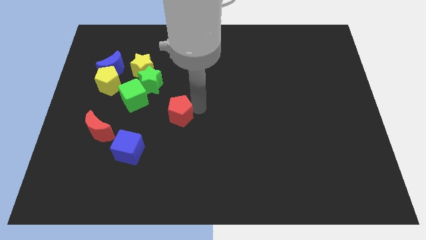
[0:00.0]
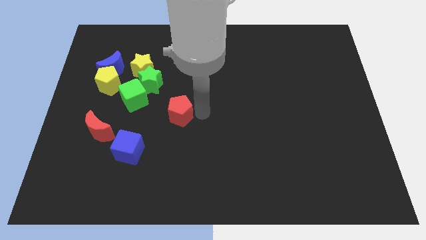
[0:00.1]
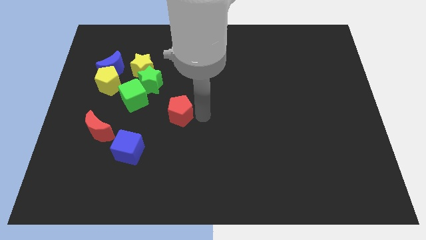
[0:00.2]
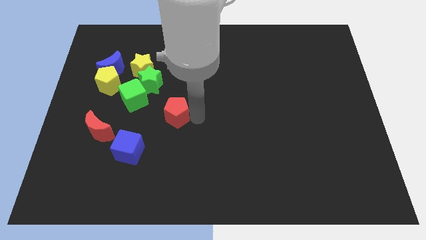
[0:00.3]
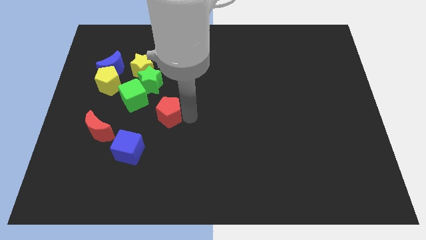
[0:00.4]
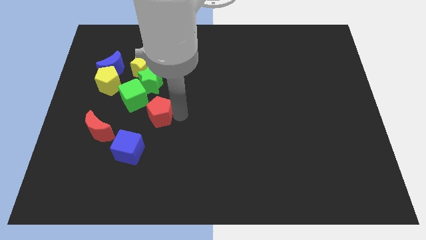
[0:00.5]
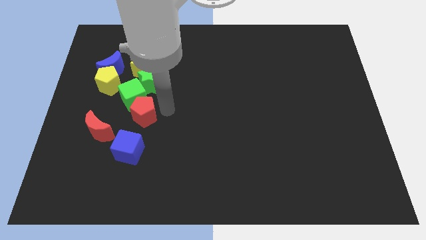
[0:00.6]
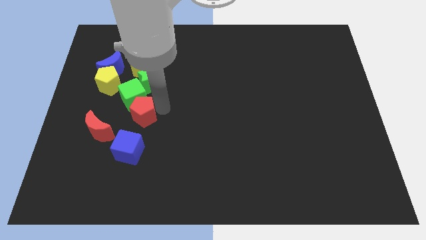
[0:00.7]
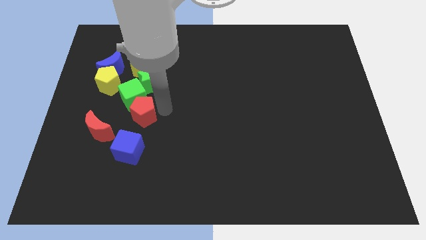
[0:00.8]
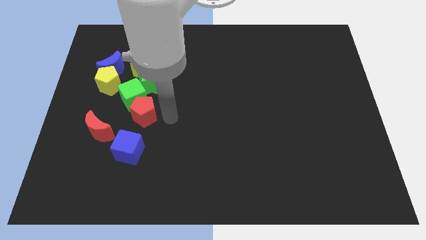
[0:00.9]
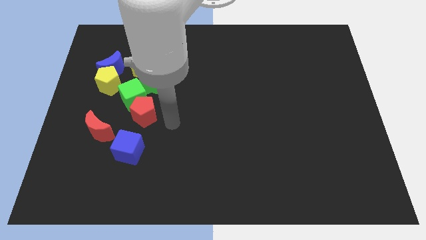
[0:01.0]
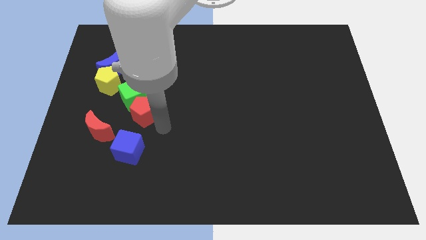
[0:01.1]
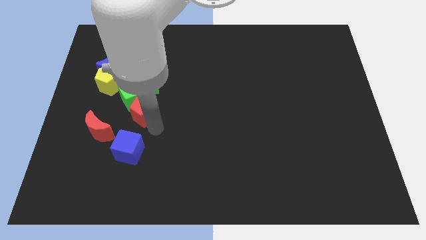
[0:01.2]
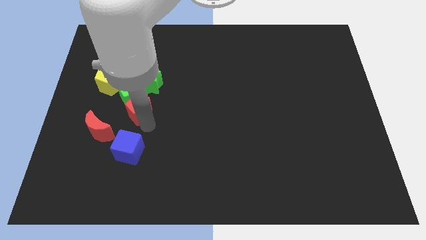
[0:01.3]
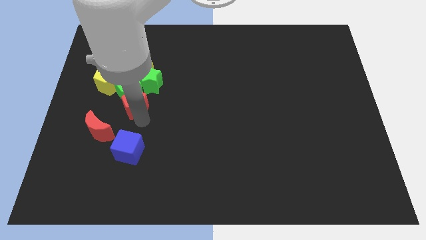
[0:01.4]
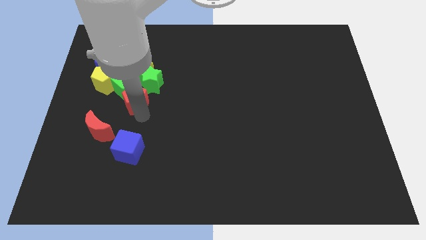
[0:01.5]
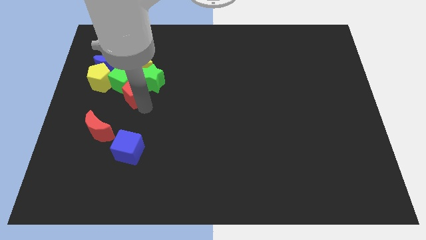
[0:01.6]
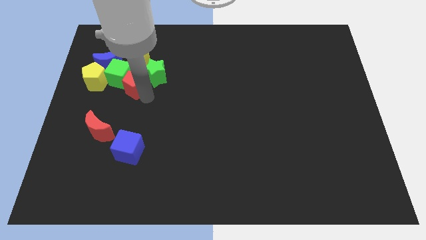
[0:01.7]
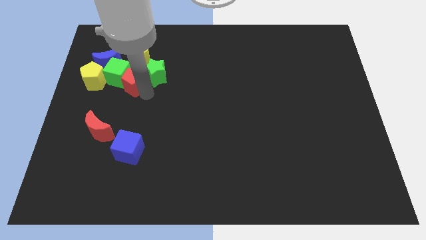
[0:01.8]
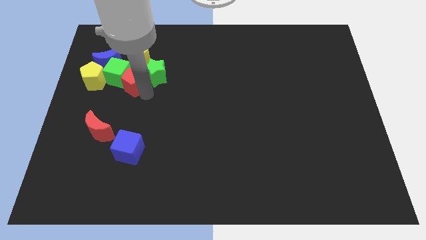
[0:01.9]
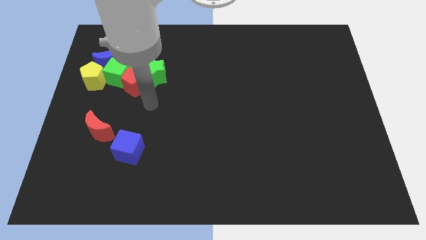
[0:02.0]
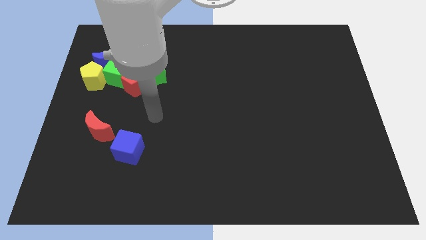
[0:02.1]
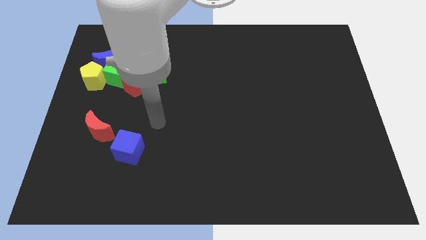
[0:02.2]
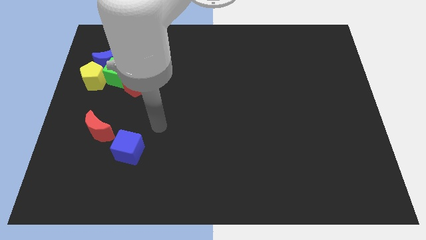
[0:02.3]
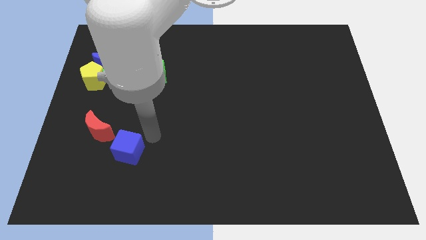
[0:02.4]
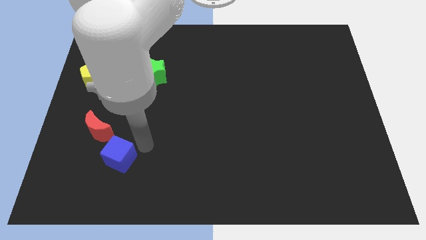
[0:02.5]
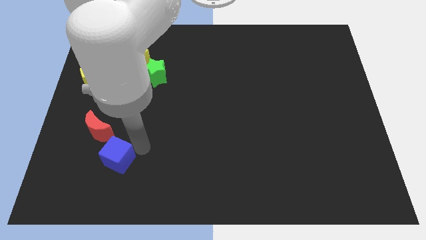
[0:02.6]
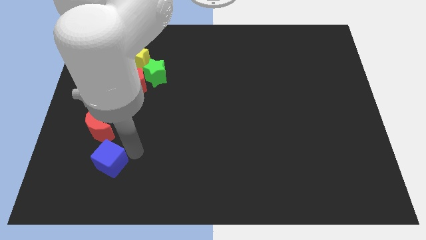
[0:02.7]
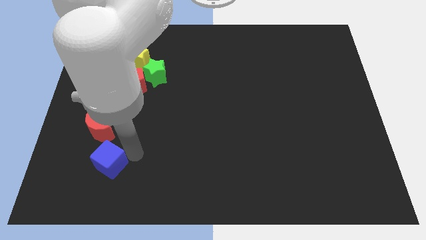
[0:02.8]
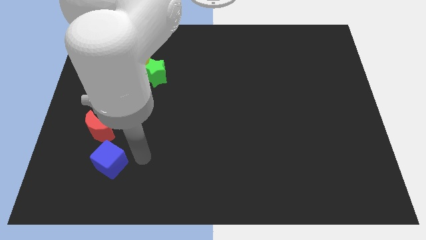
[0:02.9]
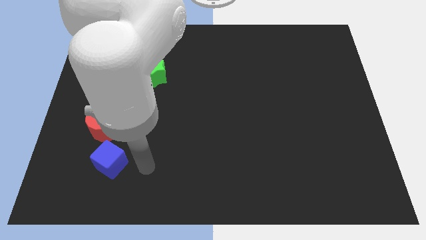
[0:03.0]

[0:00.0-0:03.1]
place the blue cube on the bottom side of the red moon

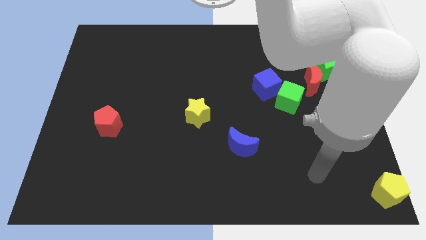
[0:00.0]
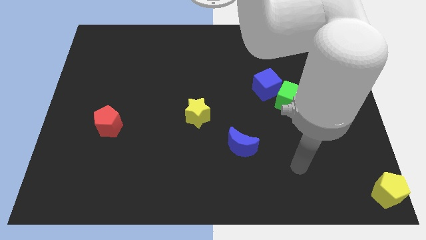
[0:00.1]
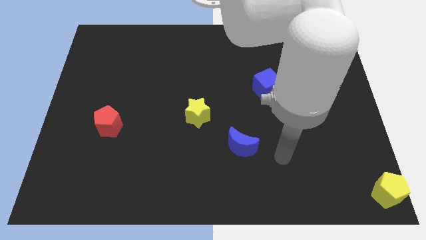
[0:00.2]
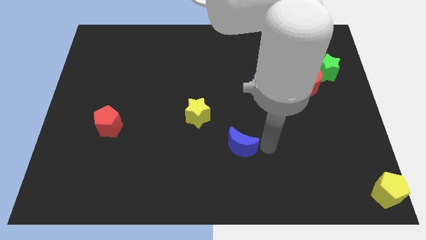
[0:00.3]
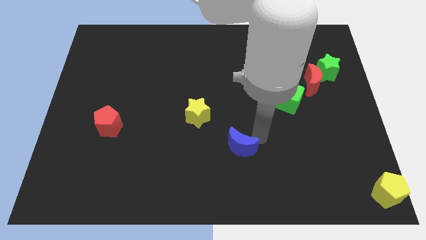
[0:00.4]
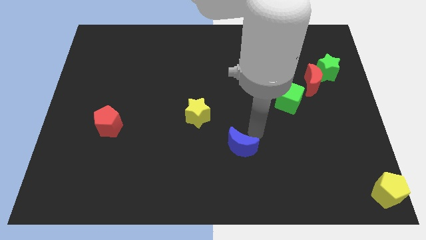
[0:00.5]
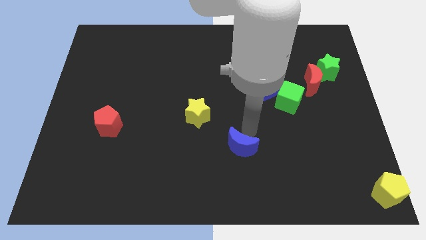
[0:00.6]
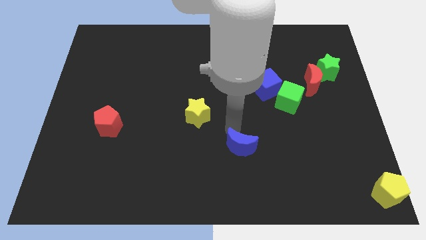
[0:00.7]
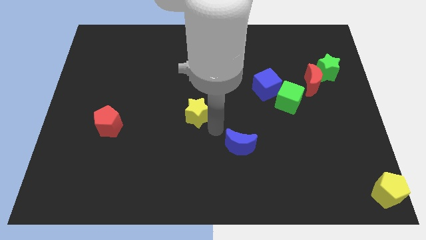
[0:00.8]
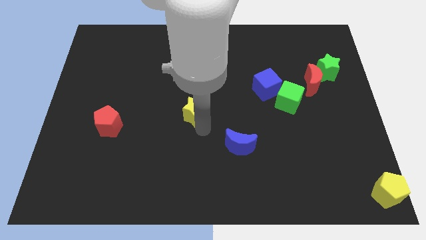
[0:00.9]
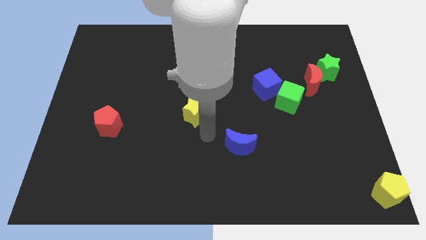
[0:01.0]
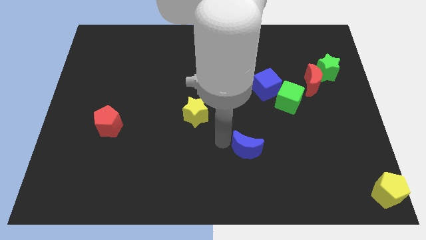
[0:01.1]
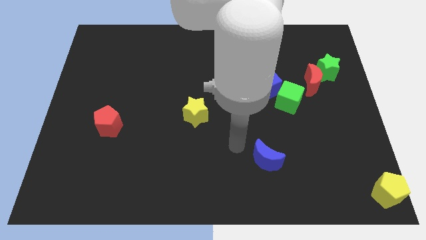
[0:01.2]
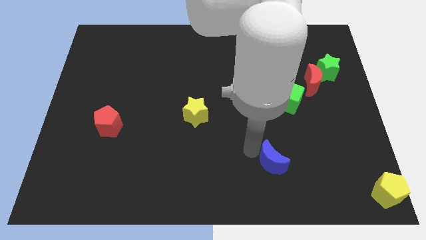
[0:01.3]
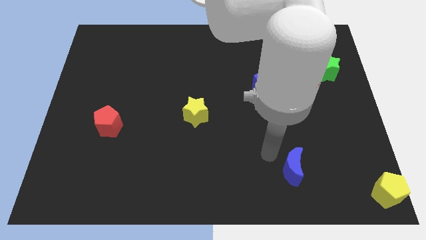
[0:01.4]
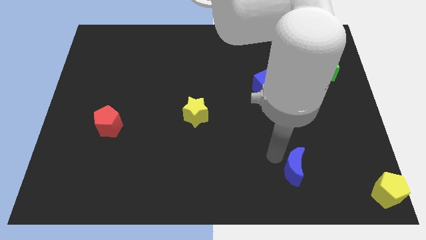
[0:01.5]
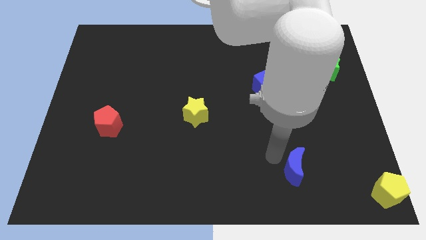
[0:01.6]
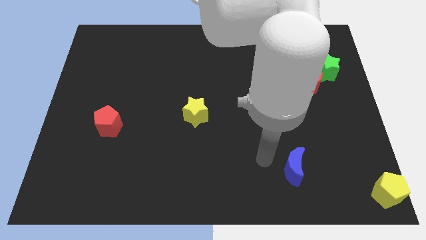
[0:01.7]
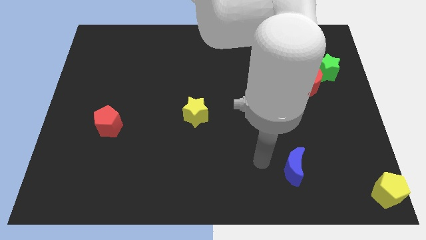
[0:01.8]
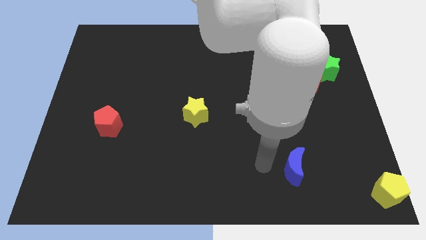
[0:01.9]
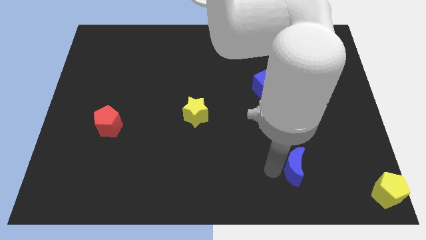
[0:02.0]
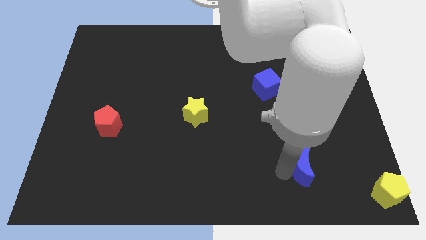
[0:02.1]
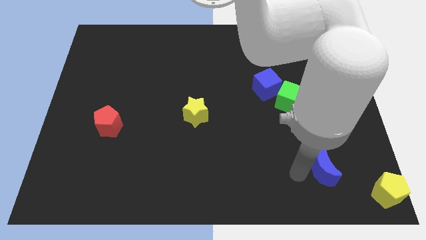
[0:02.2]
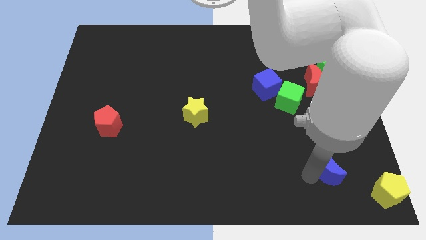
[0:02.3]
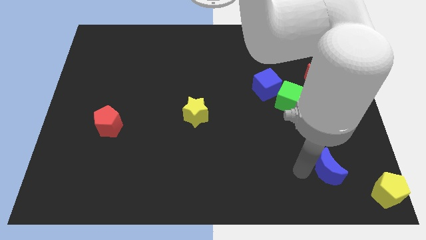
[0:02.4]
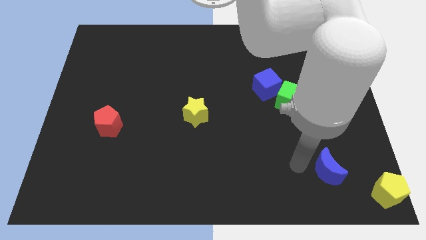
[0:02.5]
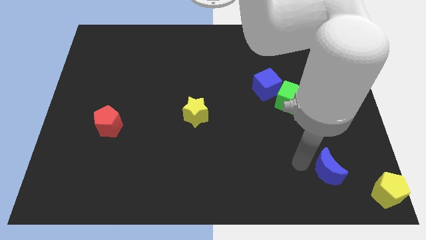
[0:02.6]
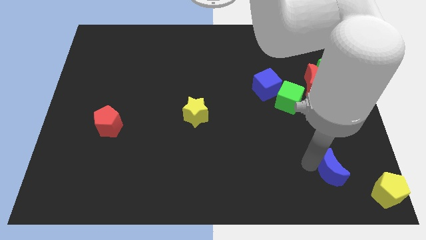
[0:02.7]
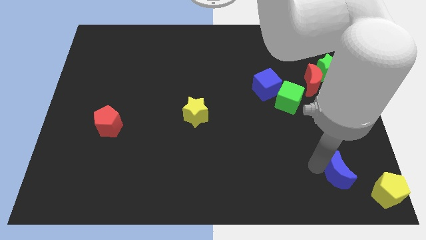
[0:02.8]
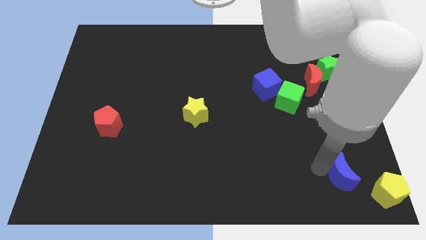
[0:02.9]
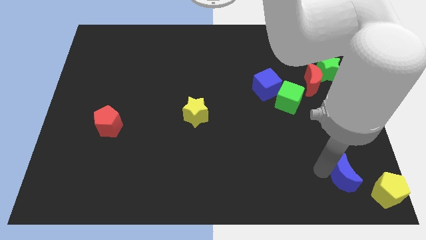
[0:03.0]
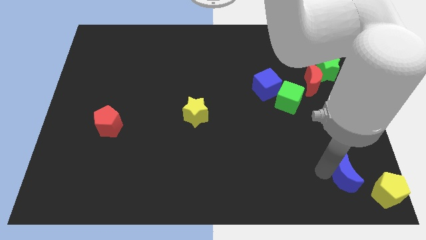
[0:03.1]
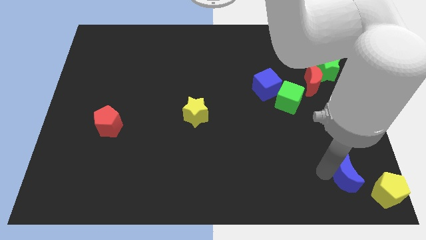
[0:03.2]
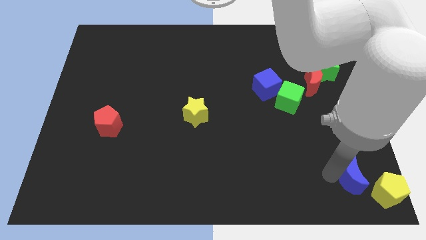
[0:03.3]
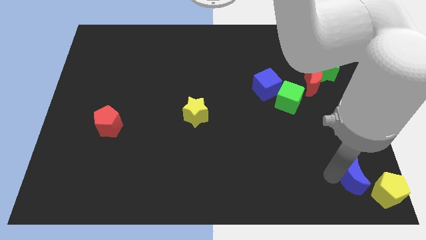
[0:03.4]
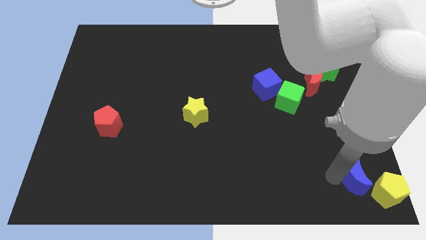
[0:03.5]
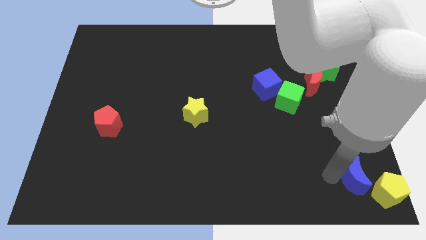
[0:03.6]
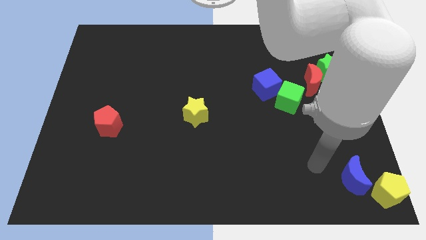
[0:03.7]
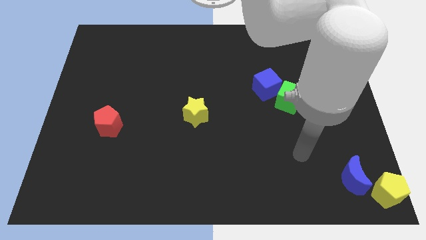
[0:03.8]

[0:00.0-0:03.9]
move the blue crescent to the top left side of the yellow pentagon

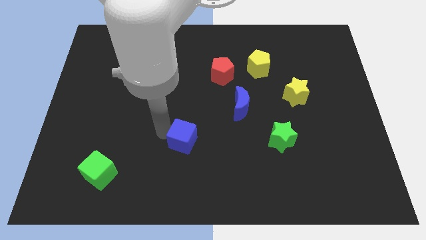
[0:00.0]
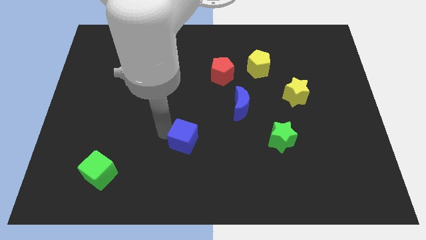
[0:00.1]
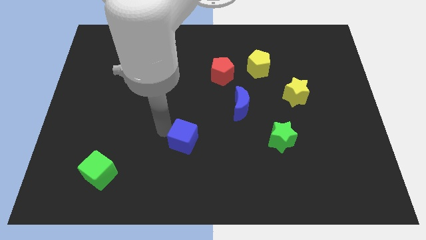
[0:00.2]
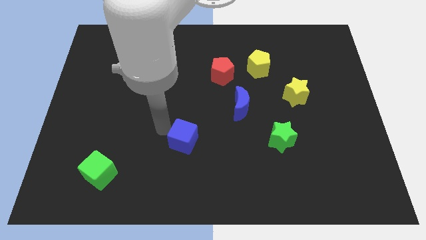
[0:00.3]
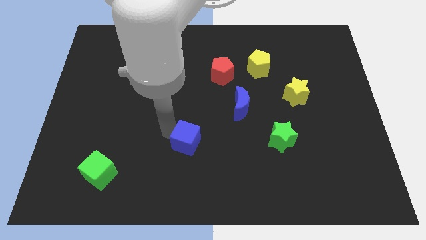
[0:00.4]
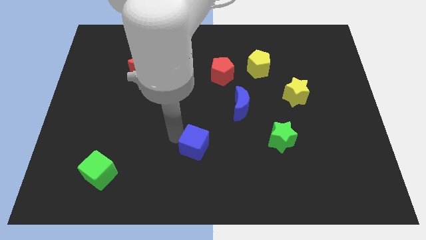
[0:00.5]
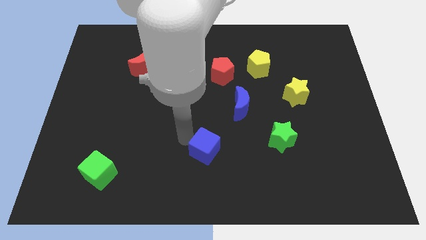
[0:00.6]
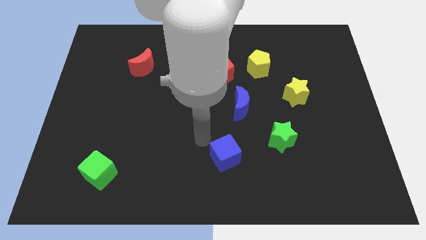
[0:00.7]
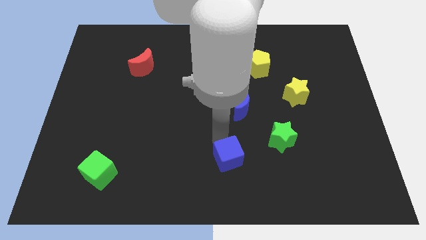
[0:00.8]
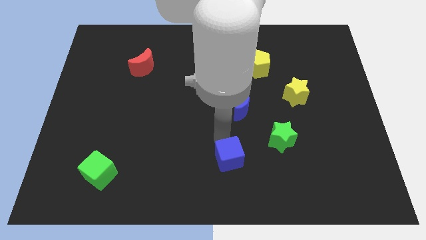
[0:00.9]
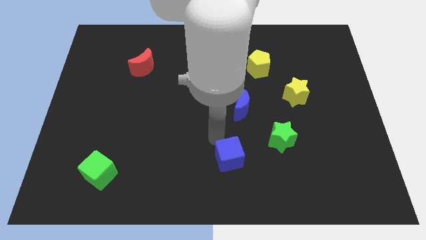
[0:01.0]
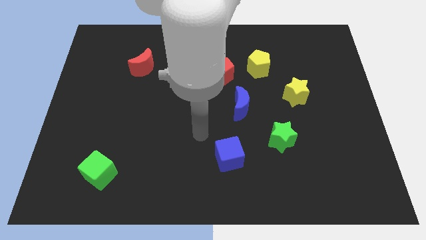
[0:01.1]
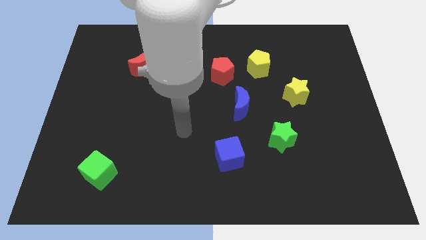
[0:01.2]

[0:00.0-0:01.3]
push the blue cube towards the bottom of blue crescent

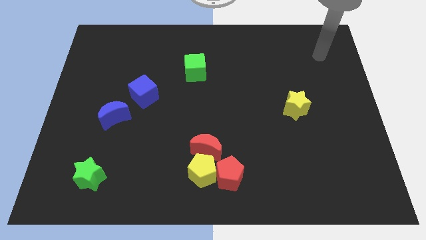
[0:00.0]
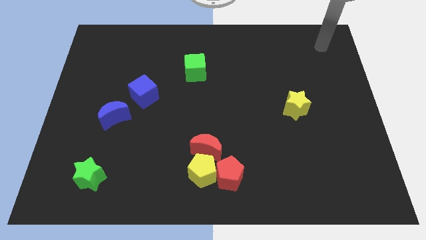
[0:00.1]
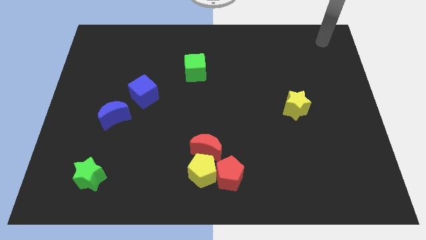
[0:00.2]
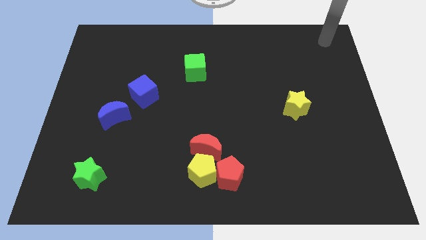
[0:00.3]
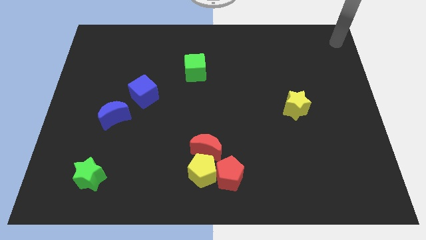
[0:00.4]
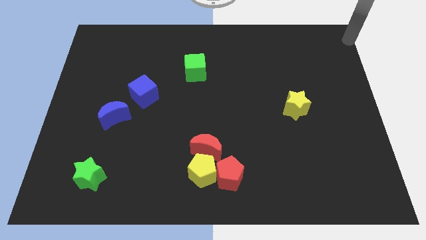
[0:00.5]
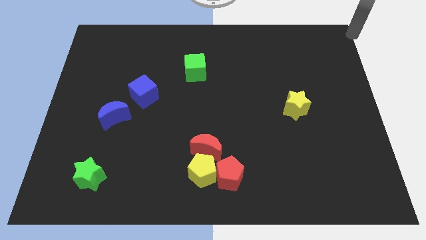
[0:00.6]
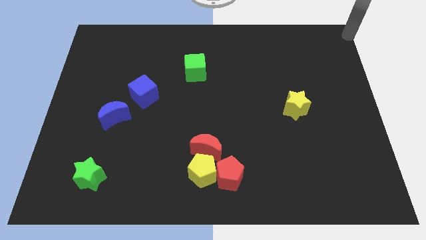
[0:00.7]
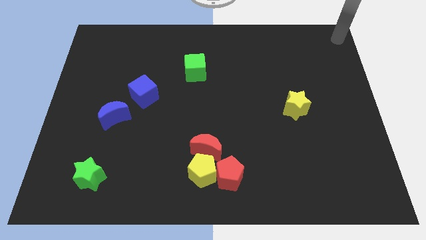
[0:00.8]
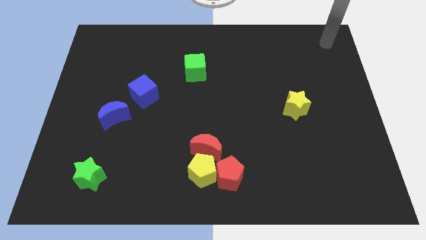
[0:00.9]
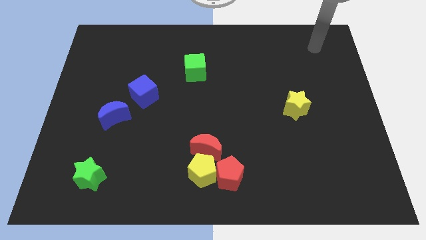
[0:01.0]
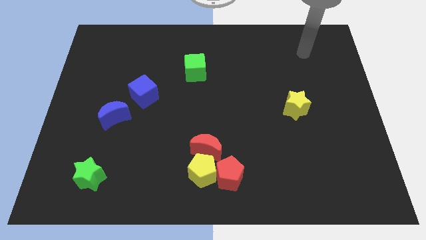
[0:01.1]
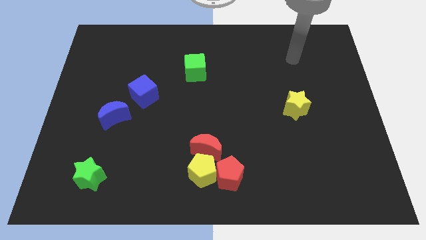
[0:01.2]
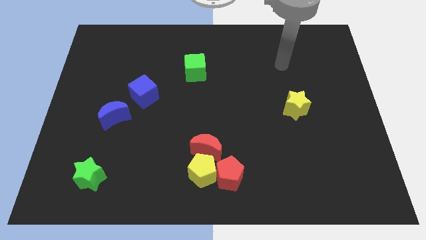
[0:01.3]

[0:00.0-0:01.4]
move your arm to the vertical top side of the yellow star
